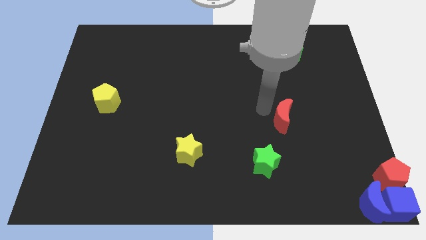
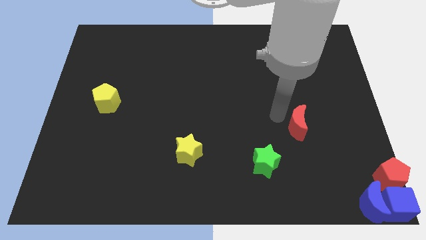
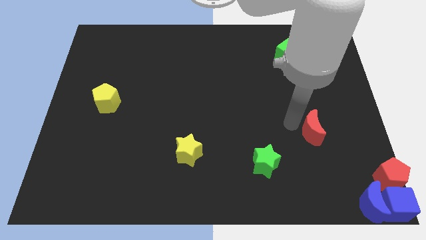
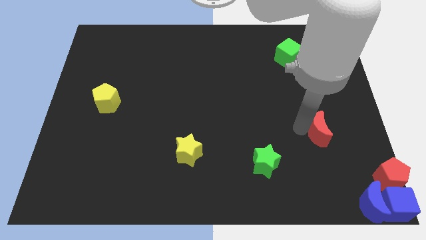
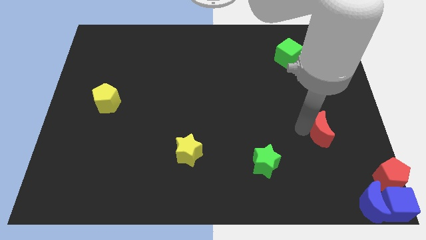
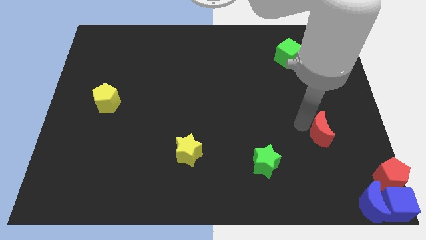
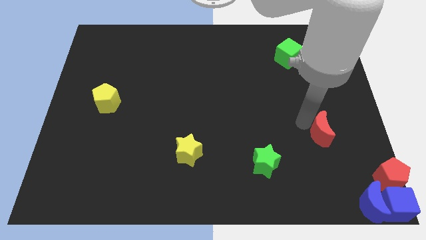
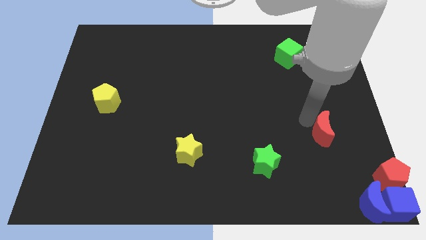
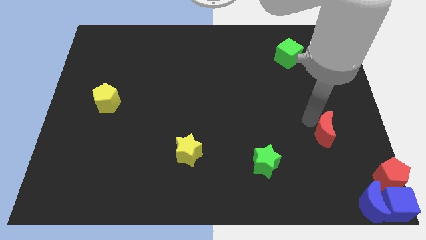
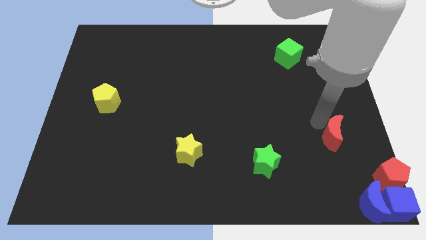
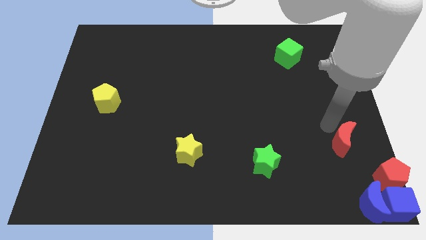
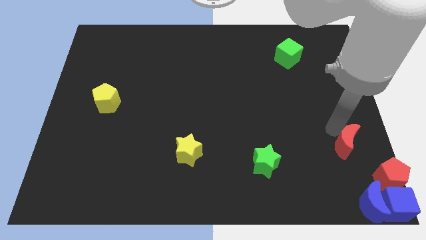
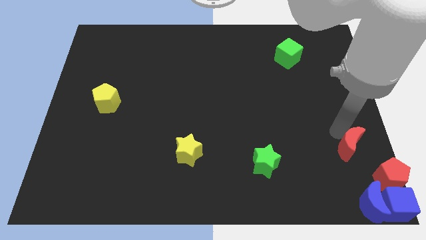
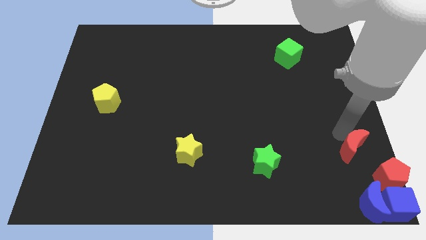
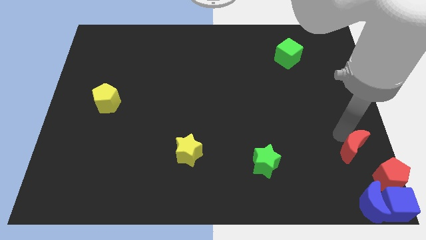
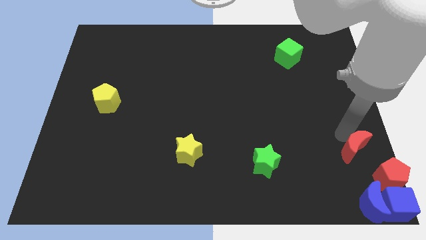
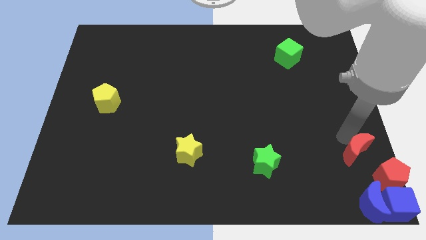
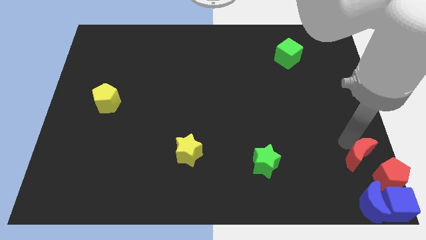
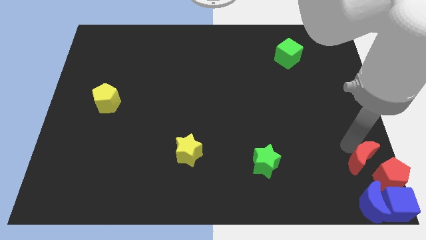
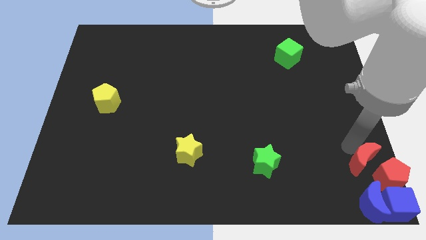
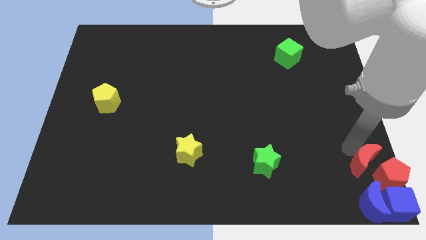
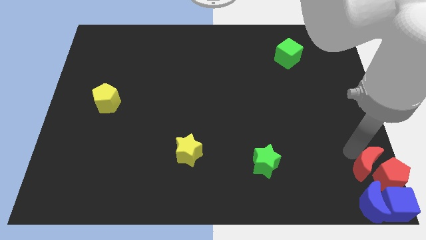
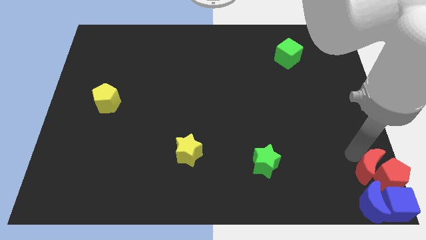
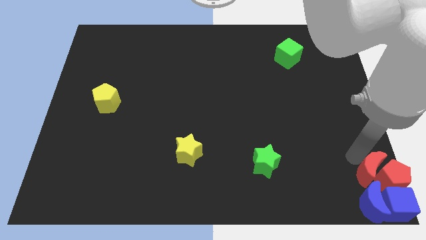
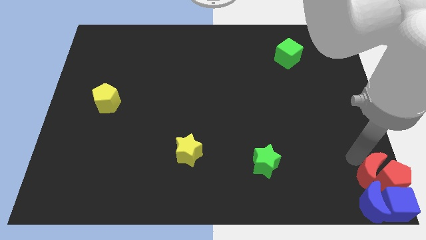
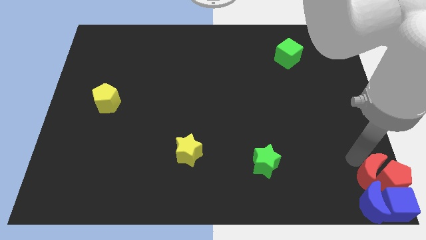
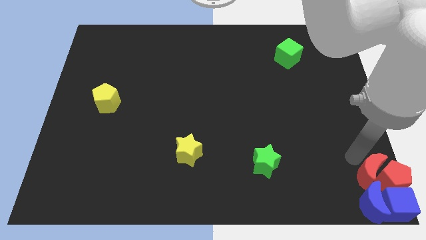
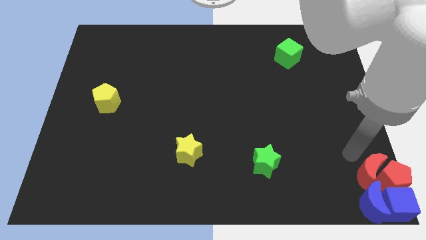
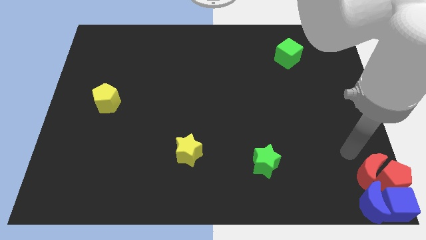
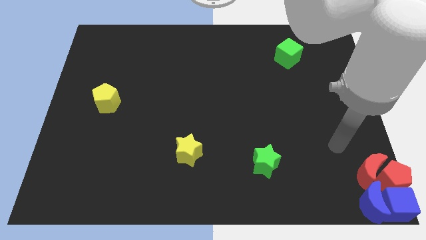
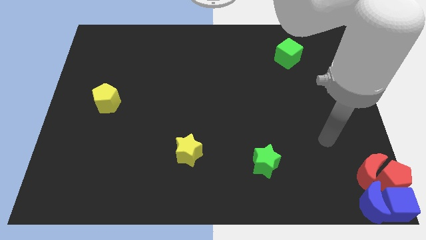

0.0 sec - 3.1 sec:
place the red crescent to the left side of red pentagon

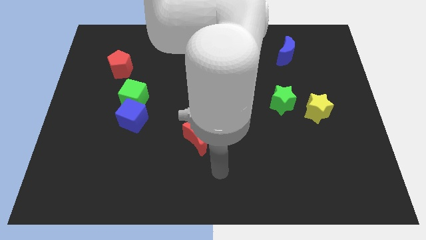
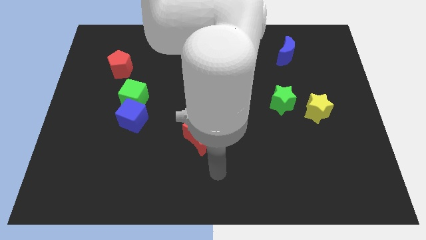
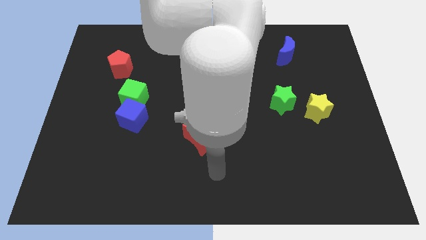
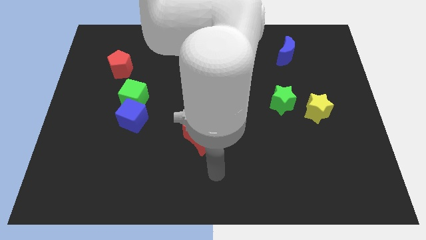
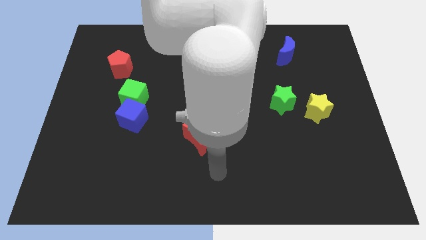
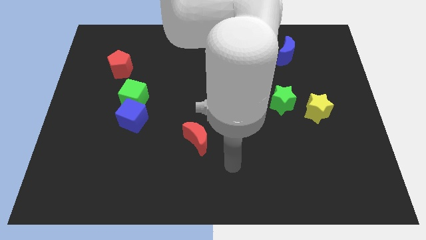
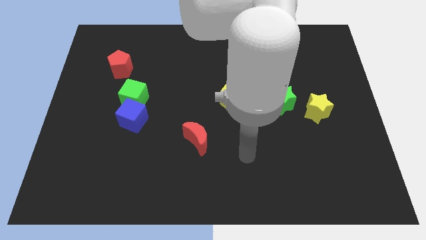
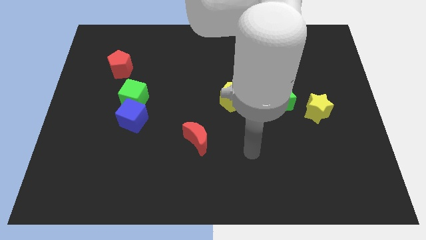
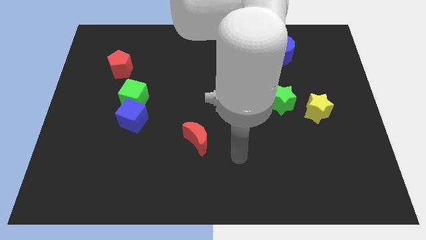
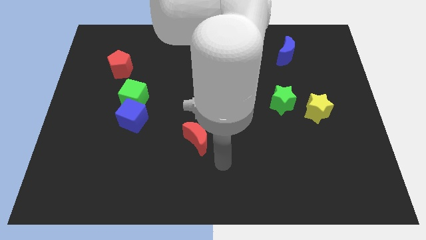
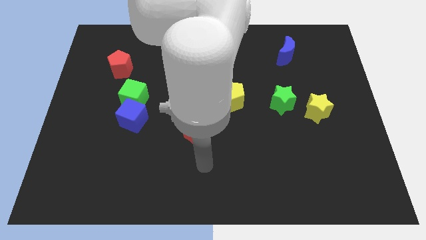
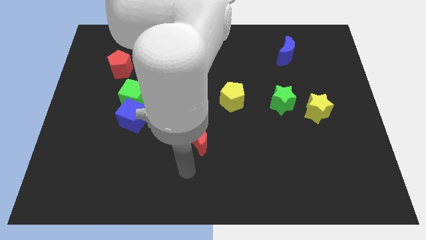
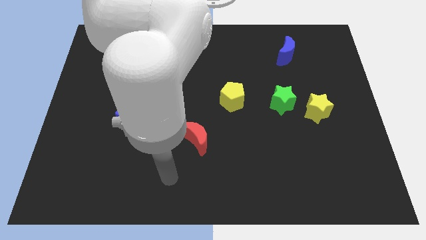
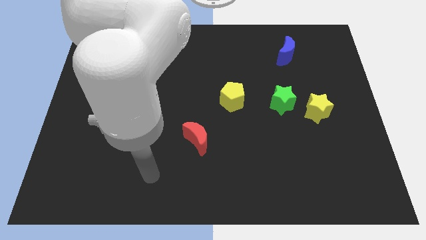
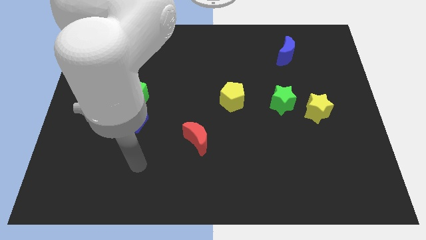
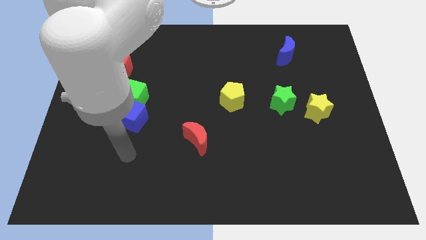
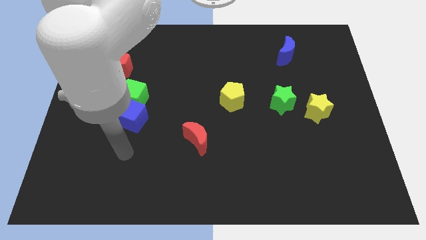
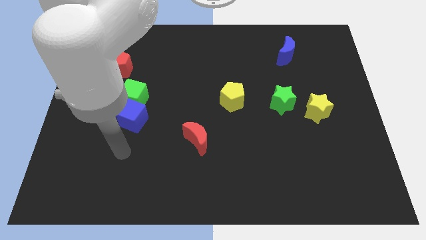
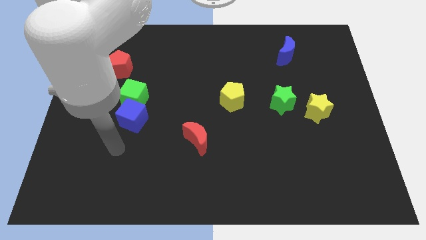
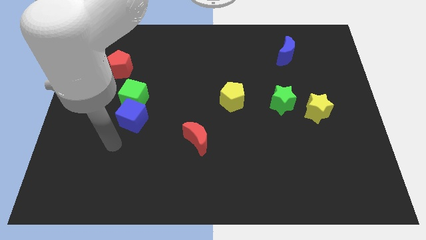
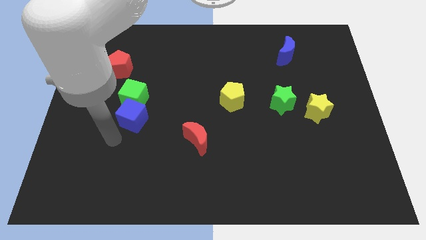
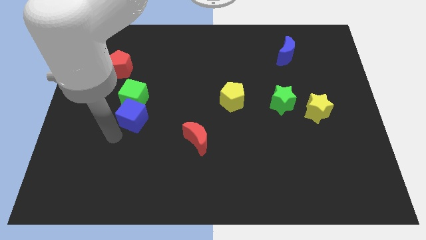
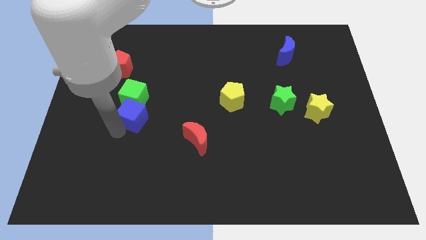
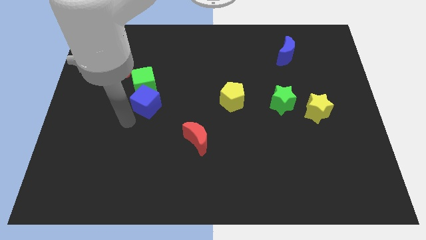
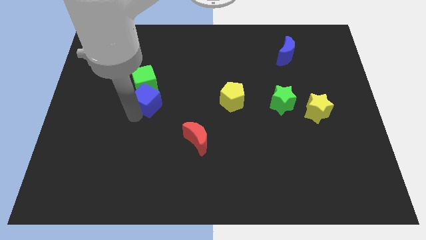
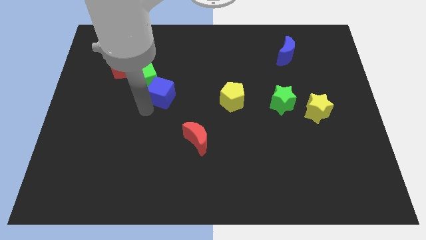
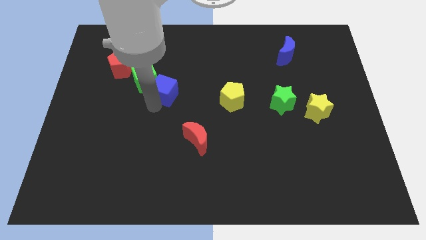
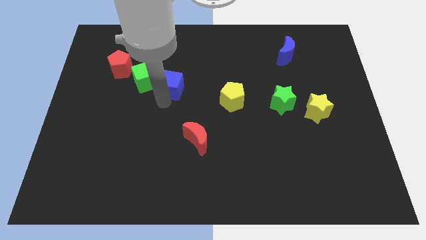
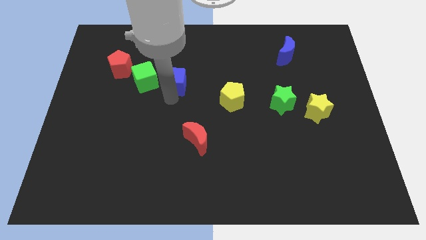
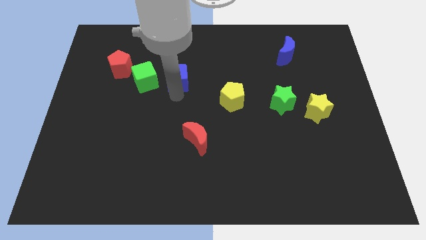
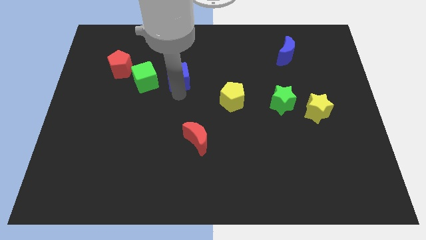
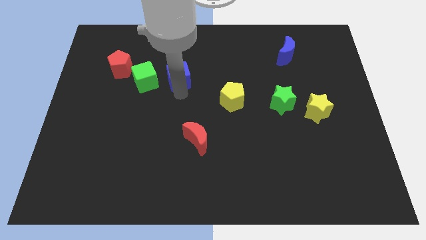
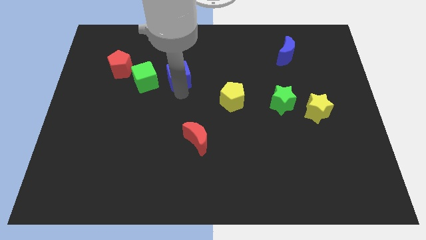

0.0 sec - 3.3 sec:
move the blue cube to the right of the green cube

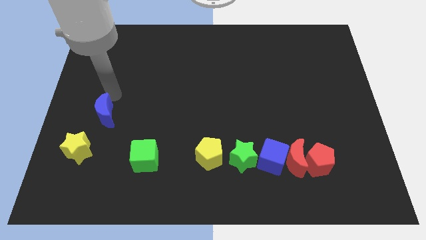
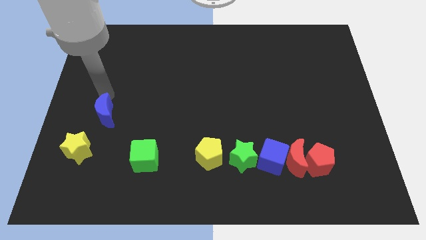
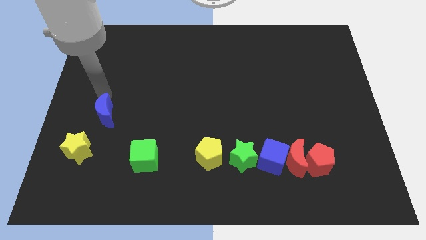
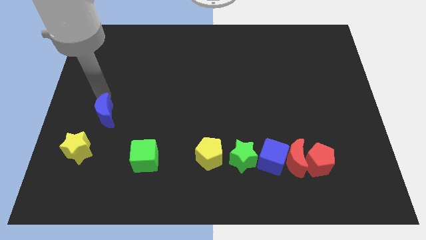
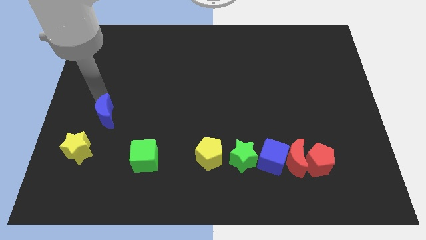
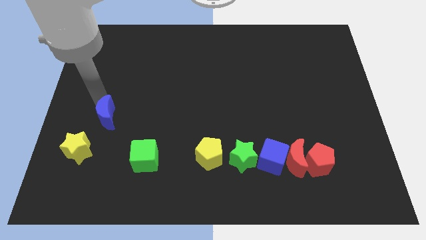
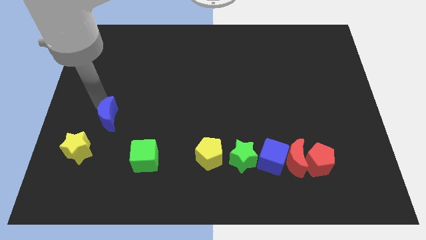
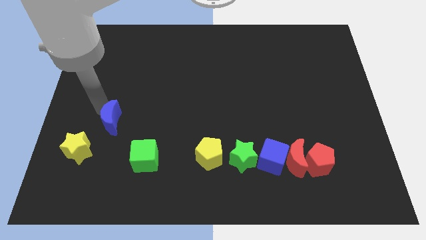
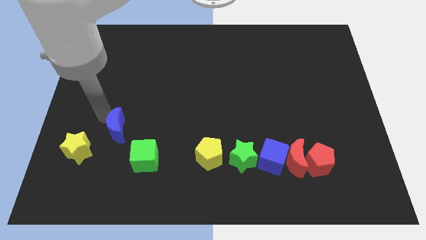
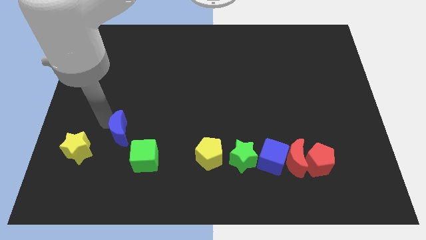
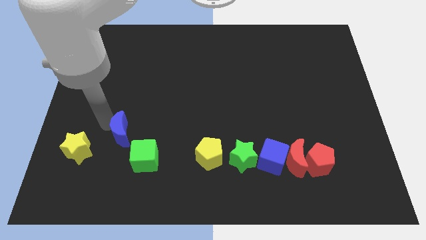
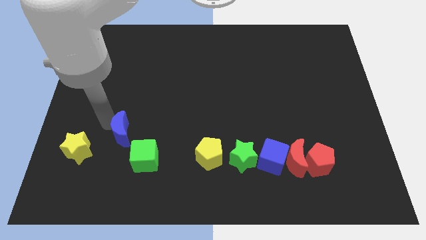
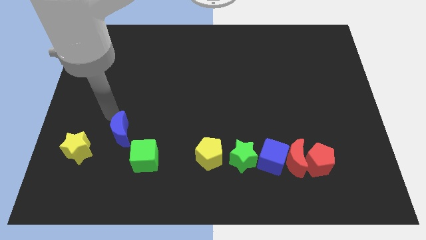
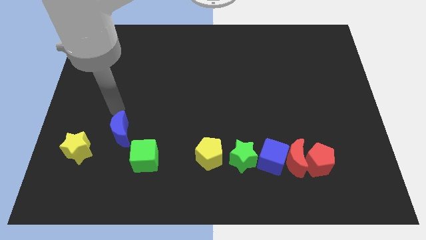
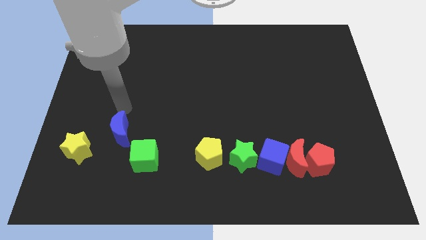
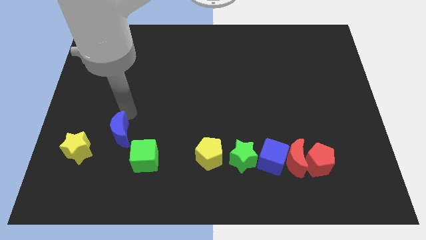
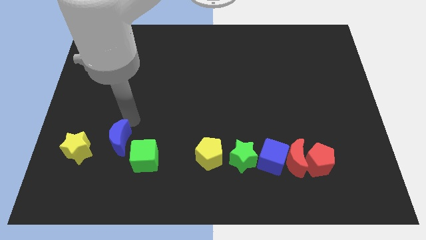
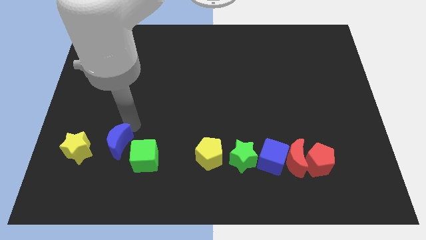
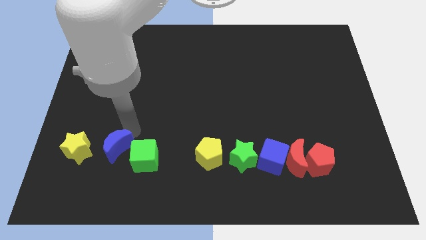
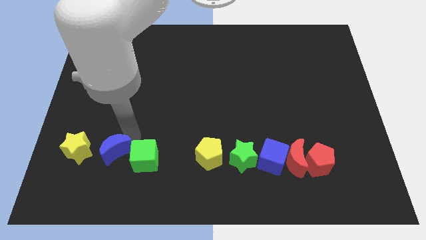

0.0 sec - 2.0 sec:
place the blue moon between the yellow star and green cube

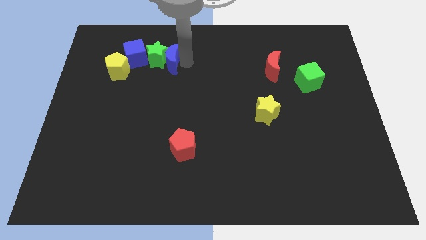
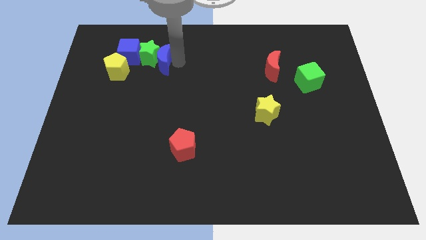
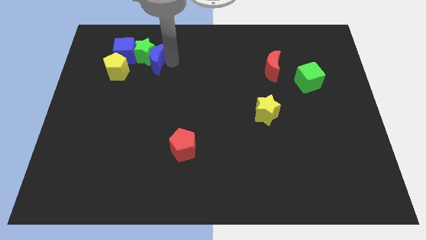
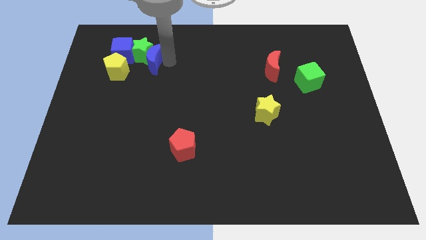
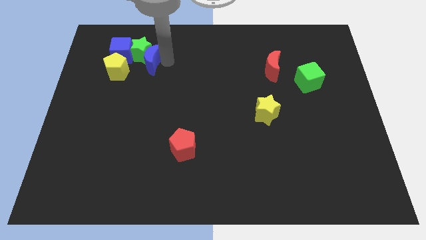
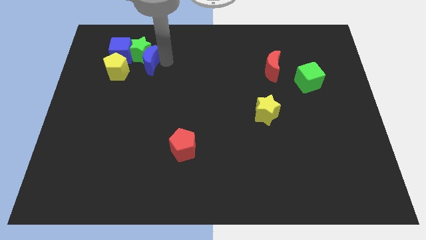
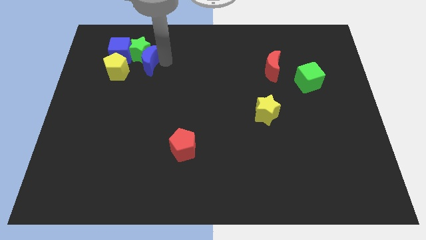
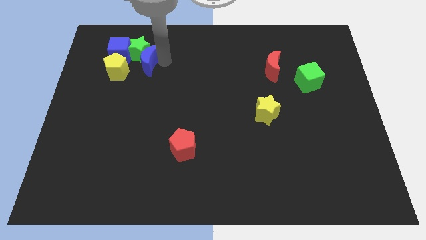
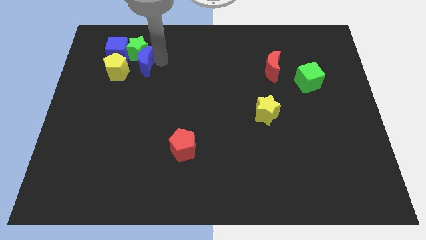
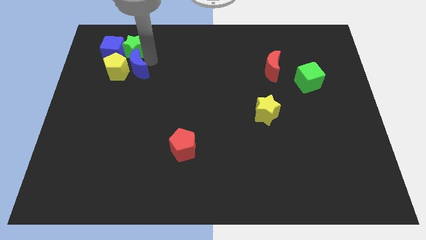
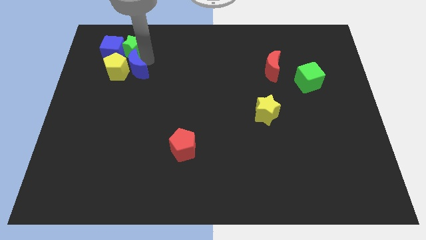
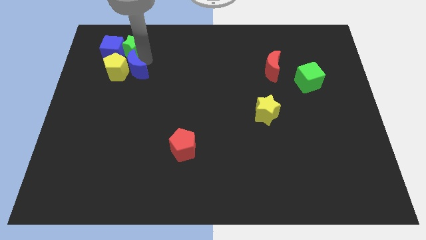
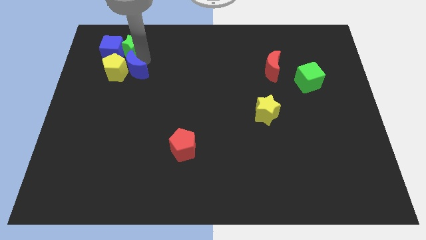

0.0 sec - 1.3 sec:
push the blue crescent to the right of the yellow pentagon
